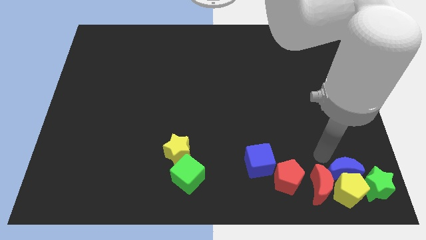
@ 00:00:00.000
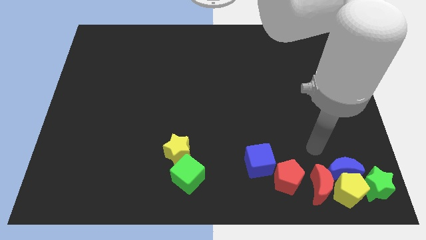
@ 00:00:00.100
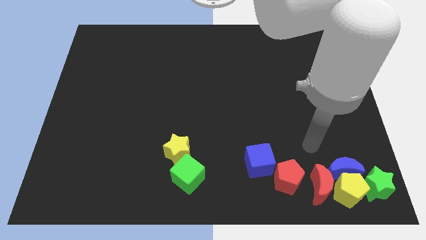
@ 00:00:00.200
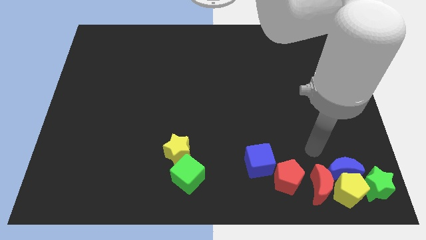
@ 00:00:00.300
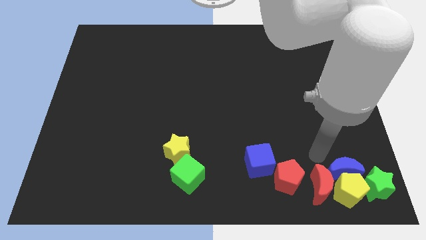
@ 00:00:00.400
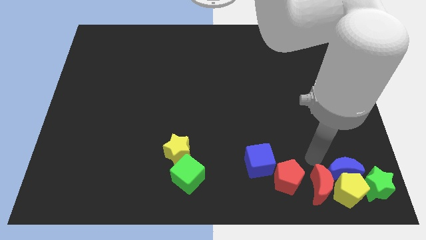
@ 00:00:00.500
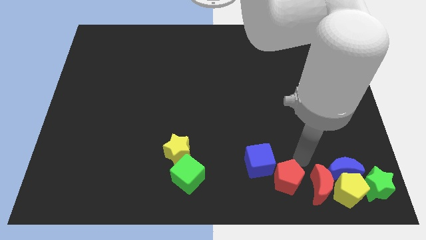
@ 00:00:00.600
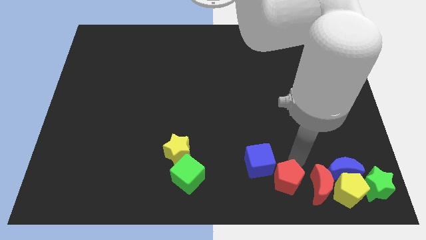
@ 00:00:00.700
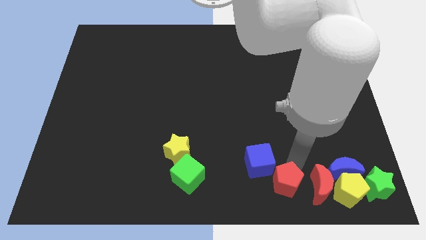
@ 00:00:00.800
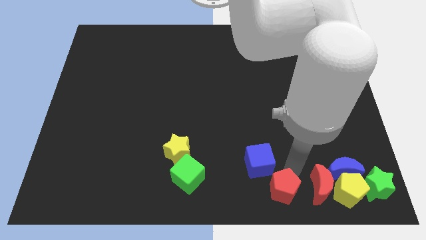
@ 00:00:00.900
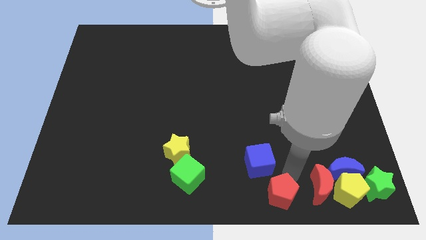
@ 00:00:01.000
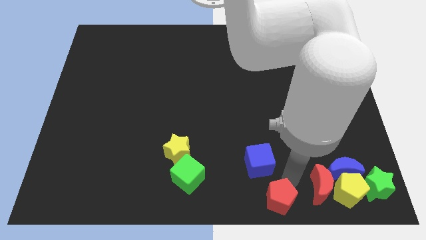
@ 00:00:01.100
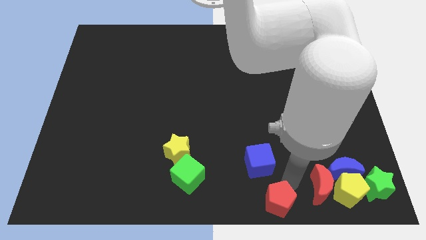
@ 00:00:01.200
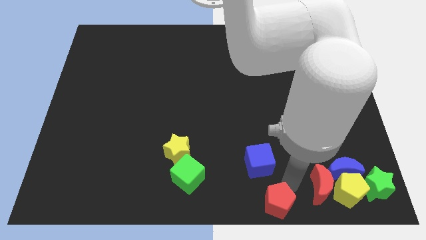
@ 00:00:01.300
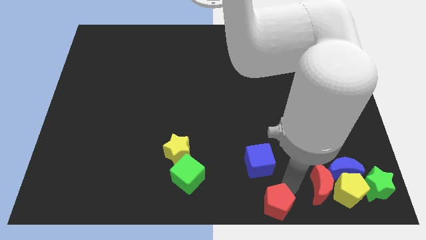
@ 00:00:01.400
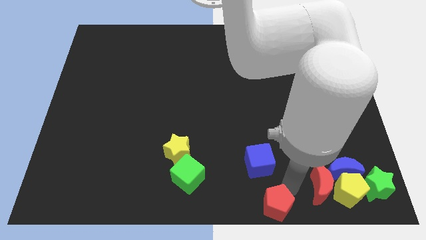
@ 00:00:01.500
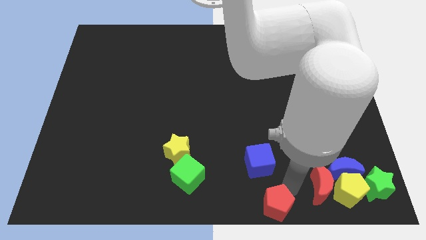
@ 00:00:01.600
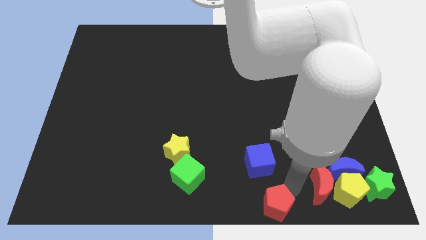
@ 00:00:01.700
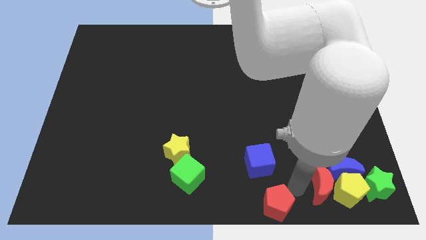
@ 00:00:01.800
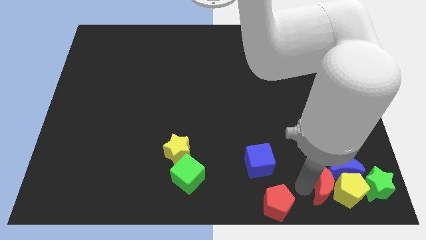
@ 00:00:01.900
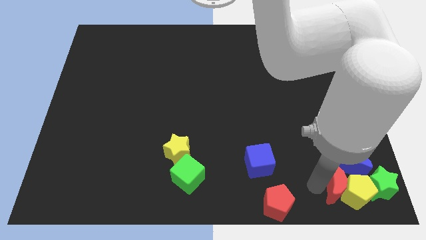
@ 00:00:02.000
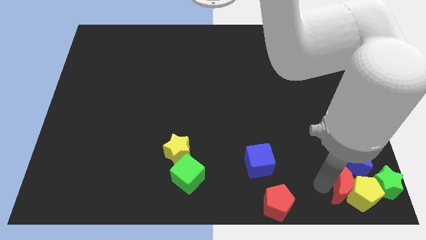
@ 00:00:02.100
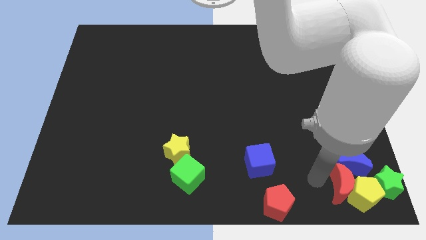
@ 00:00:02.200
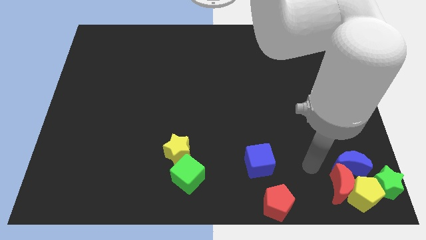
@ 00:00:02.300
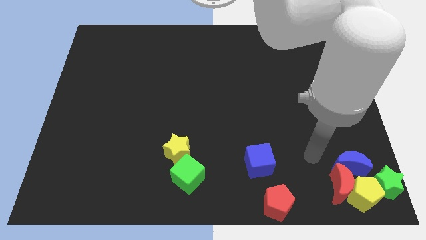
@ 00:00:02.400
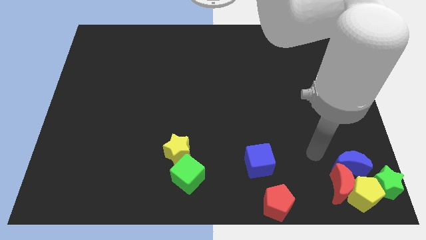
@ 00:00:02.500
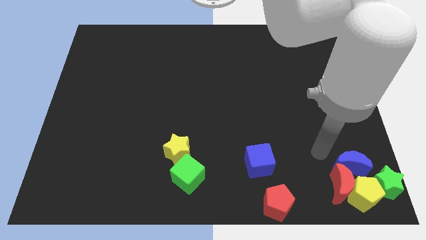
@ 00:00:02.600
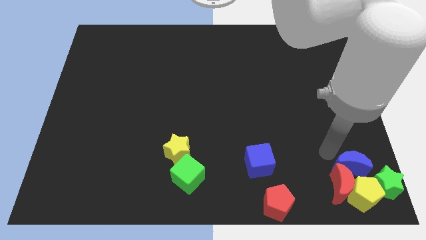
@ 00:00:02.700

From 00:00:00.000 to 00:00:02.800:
push red pentagon away from red crescent

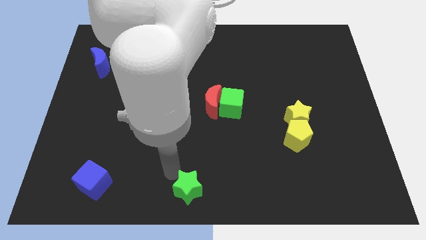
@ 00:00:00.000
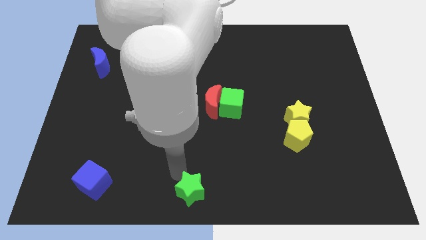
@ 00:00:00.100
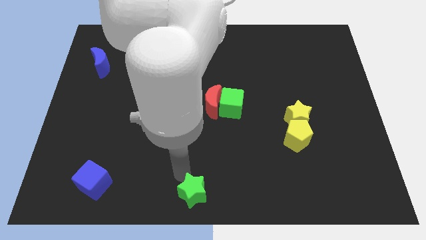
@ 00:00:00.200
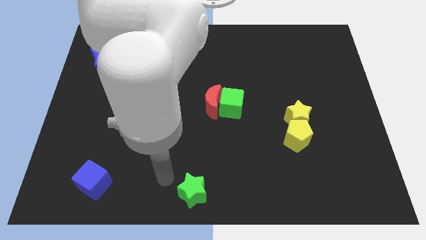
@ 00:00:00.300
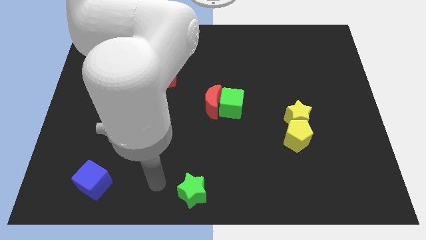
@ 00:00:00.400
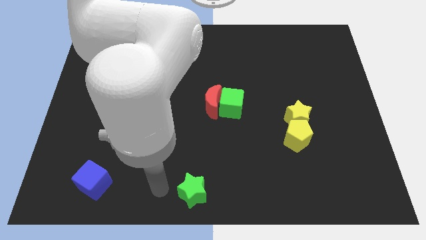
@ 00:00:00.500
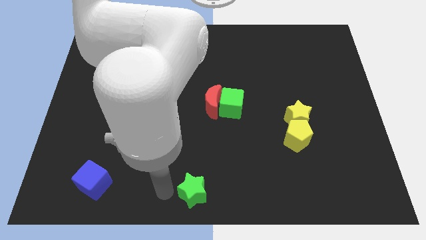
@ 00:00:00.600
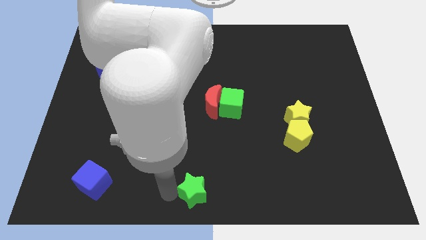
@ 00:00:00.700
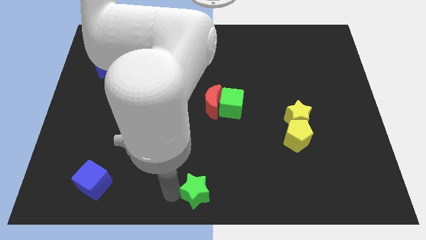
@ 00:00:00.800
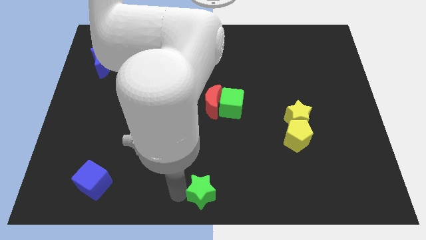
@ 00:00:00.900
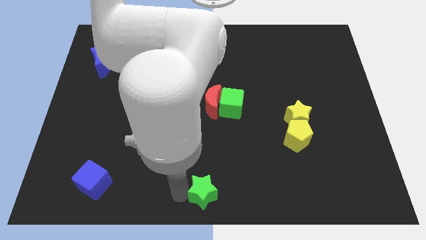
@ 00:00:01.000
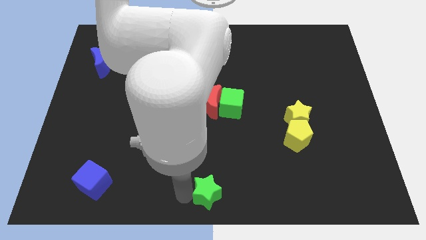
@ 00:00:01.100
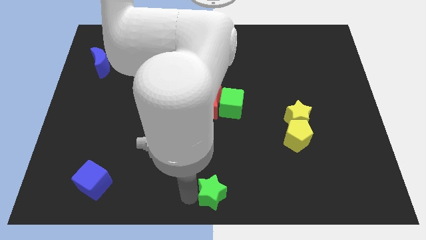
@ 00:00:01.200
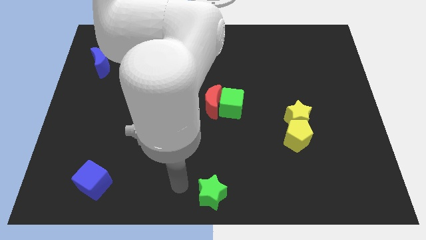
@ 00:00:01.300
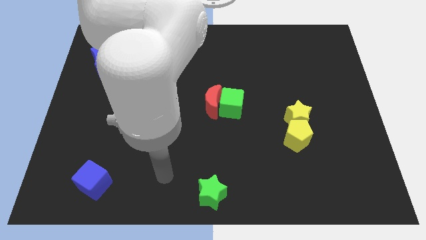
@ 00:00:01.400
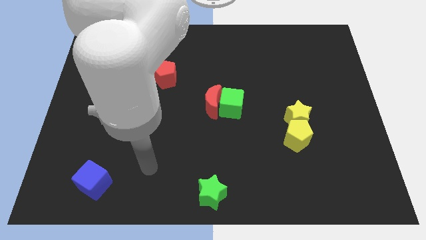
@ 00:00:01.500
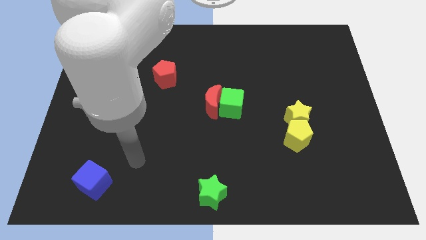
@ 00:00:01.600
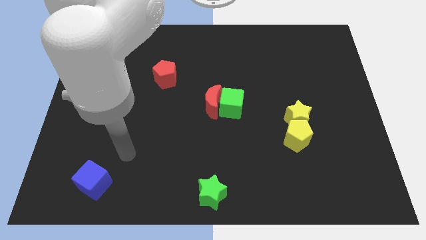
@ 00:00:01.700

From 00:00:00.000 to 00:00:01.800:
move the green star to the bottom center

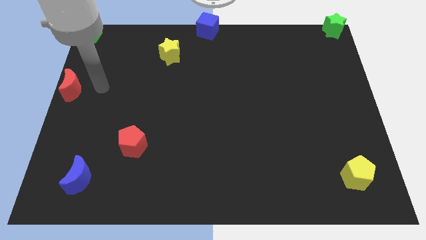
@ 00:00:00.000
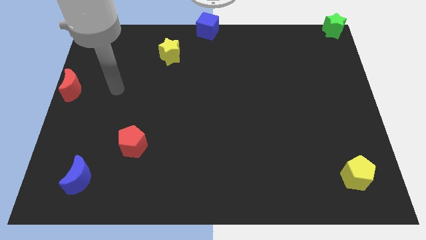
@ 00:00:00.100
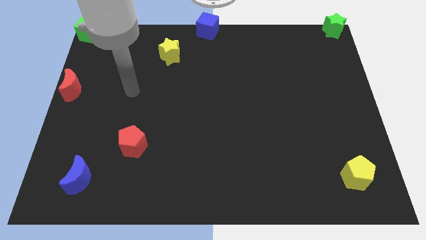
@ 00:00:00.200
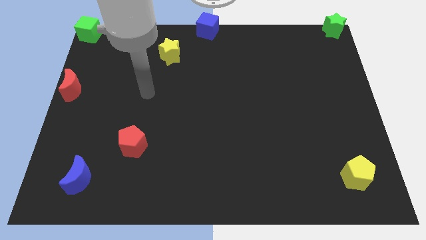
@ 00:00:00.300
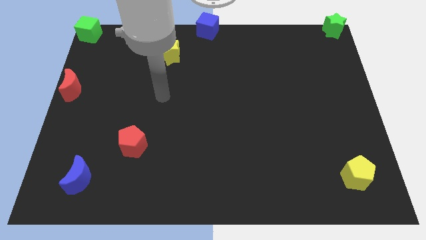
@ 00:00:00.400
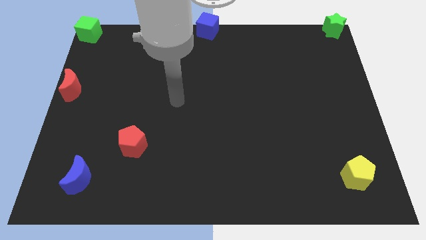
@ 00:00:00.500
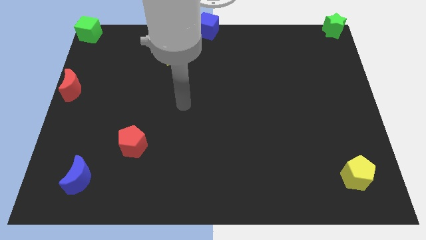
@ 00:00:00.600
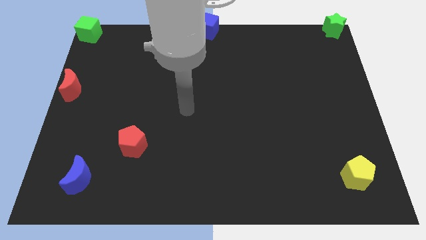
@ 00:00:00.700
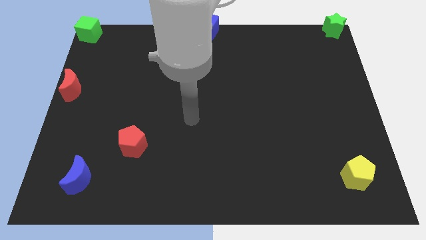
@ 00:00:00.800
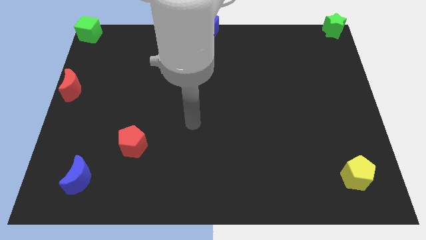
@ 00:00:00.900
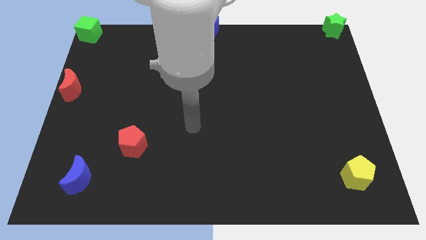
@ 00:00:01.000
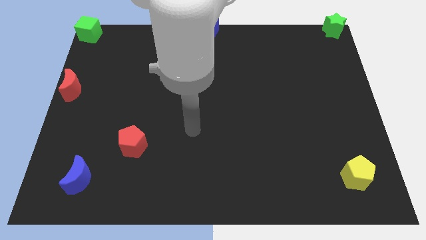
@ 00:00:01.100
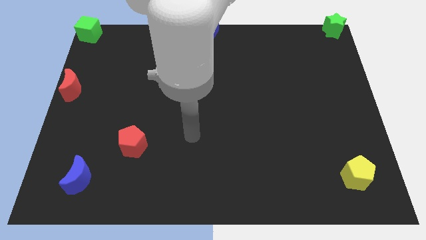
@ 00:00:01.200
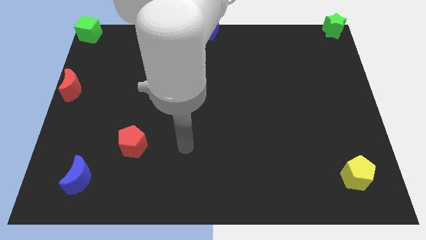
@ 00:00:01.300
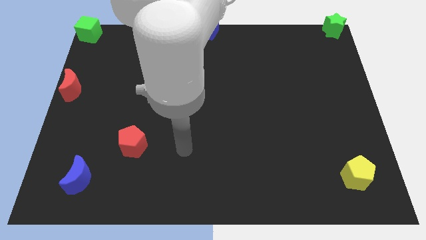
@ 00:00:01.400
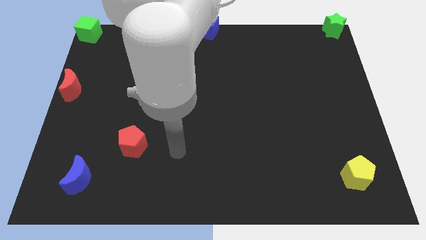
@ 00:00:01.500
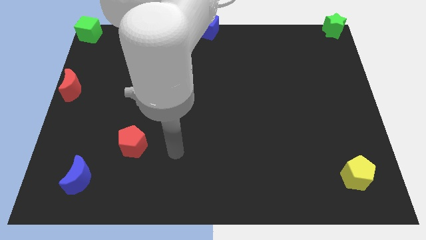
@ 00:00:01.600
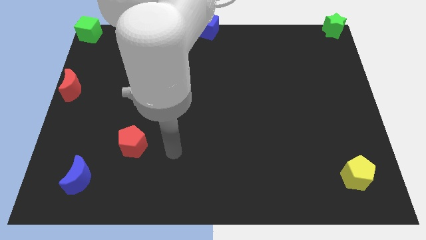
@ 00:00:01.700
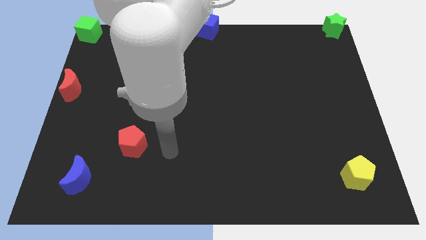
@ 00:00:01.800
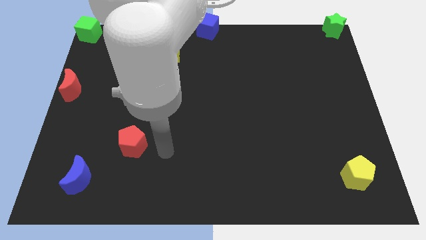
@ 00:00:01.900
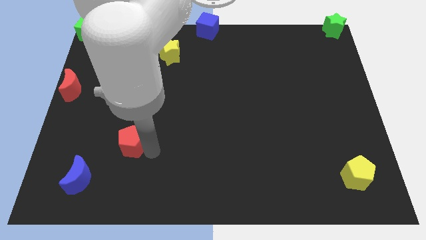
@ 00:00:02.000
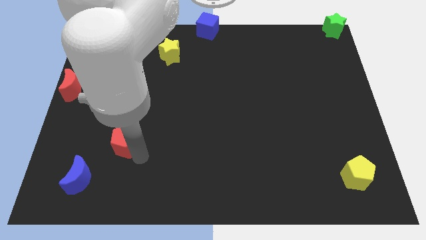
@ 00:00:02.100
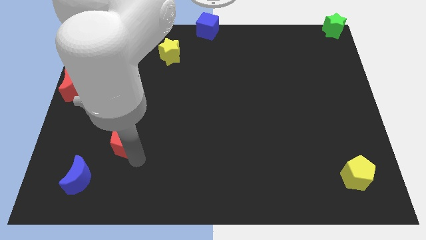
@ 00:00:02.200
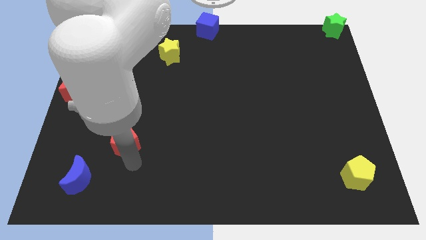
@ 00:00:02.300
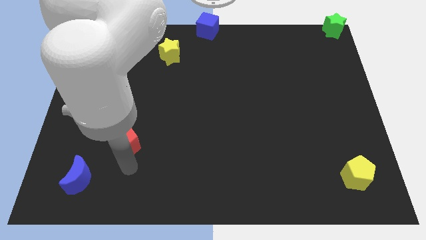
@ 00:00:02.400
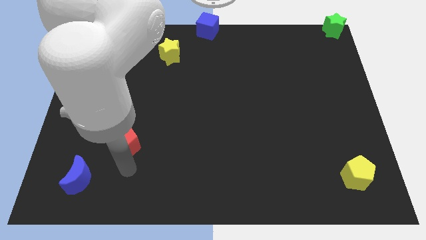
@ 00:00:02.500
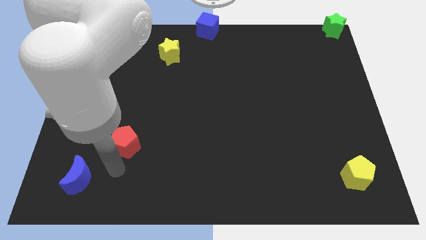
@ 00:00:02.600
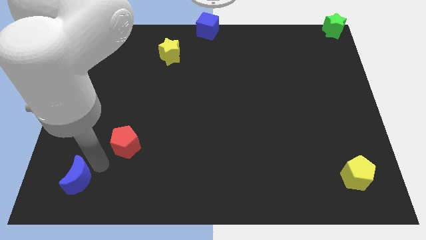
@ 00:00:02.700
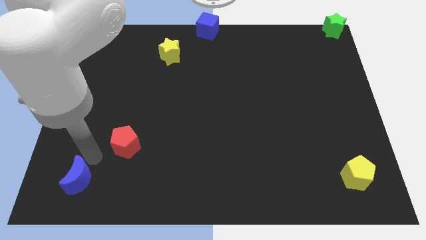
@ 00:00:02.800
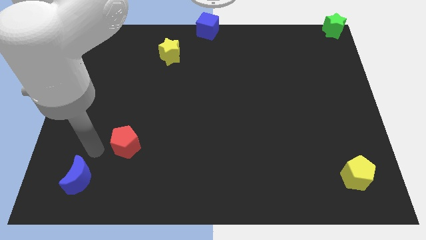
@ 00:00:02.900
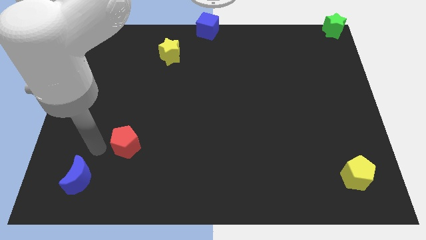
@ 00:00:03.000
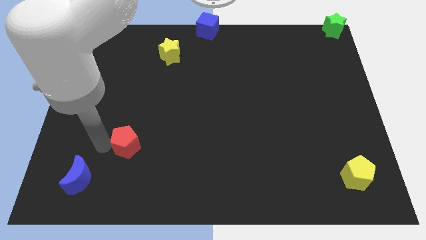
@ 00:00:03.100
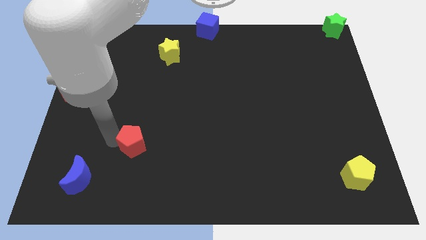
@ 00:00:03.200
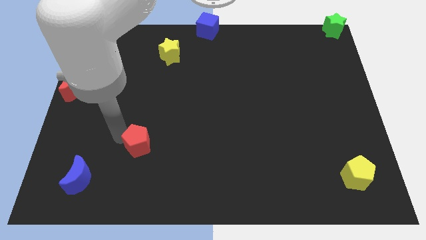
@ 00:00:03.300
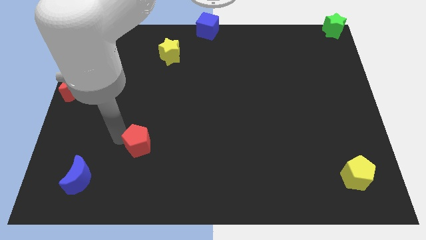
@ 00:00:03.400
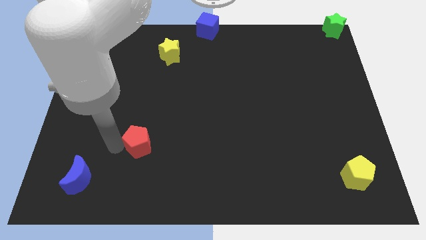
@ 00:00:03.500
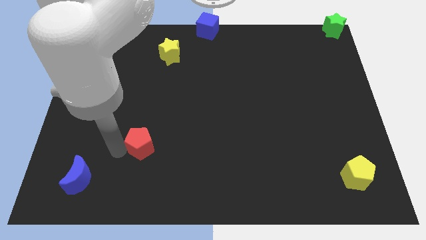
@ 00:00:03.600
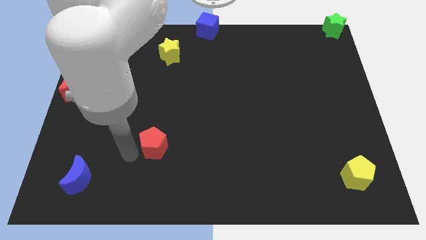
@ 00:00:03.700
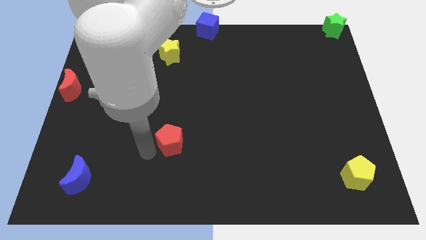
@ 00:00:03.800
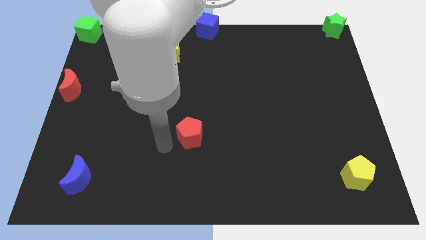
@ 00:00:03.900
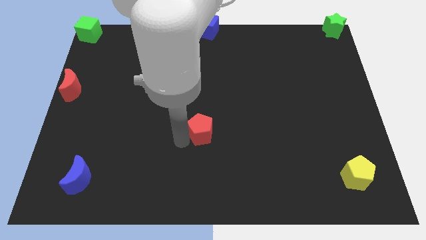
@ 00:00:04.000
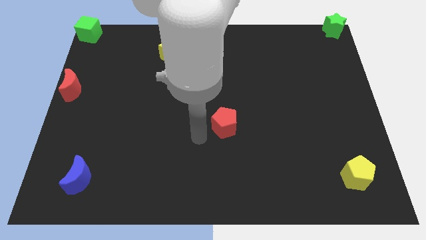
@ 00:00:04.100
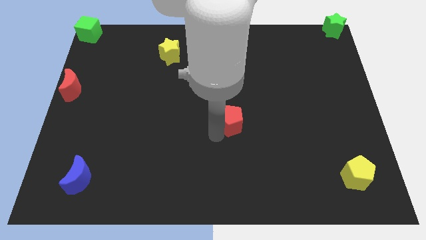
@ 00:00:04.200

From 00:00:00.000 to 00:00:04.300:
move red pentagon horizontally
